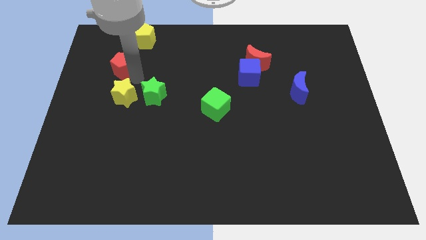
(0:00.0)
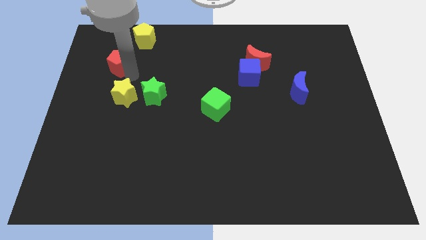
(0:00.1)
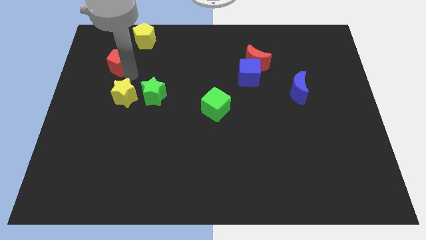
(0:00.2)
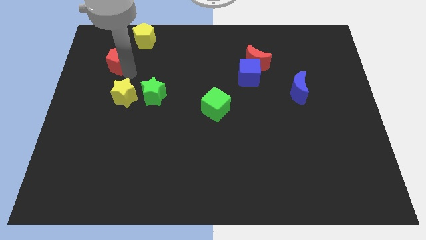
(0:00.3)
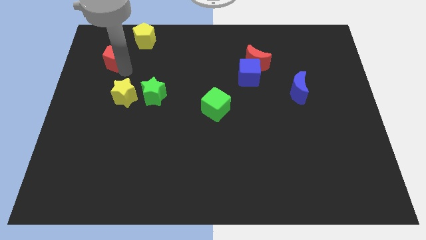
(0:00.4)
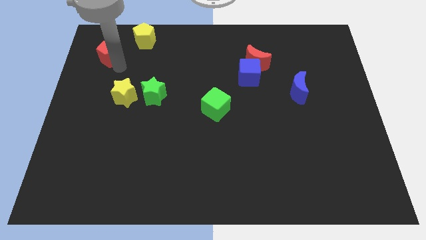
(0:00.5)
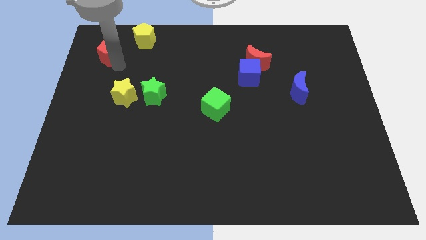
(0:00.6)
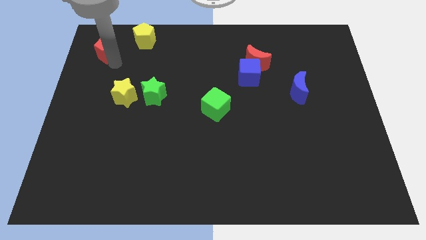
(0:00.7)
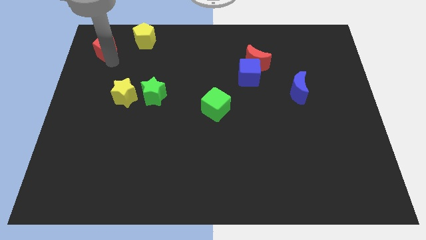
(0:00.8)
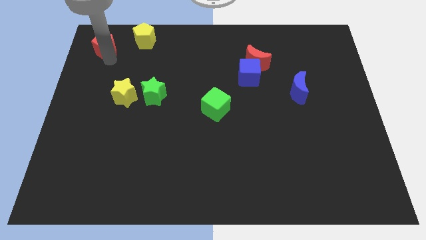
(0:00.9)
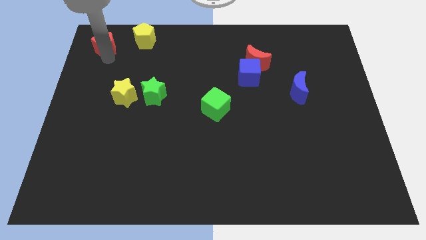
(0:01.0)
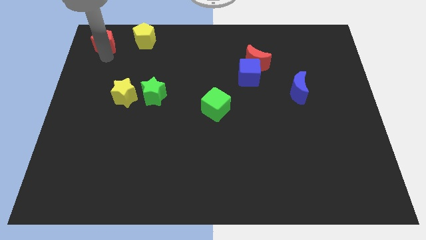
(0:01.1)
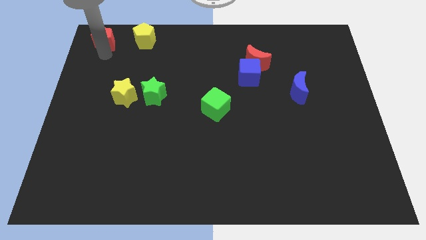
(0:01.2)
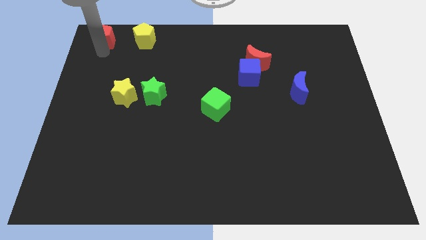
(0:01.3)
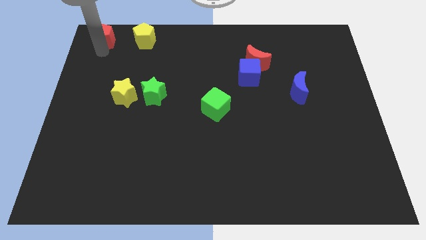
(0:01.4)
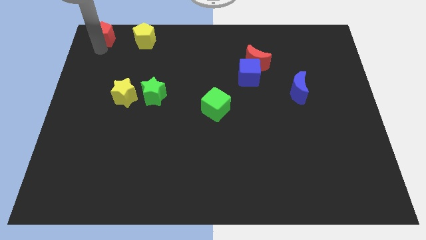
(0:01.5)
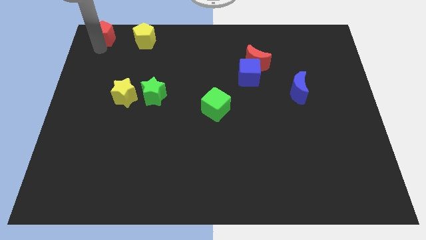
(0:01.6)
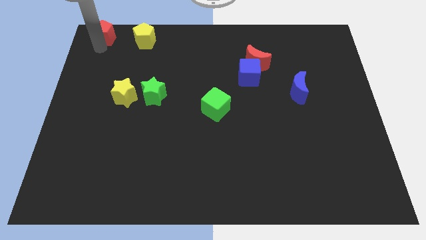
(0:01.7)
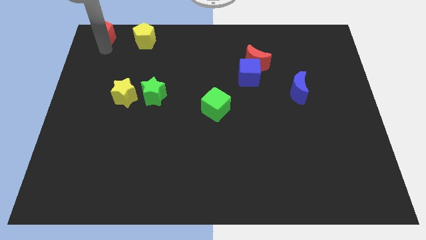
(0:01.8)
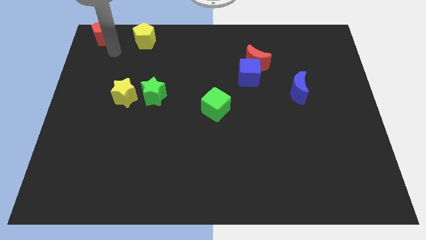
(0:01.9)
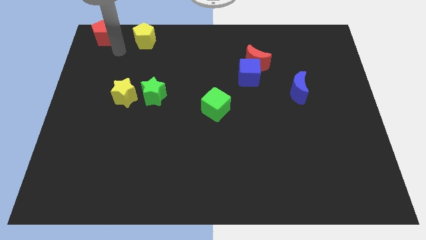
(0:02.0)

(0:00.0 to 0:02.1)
move red pentagon to the top left corner of the board

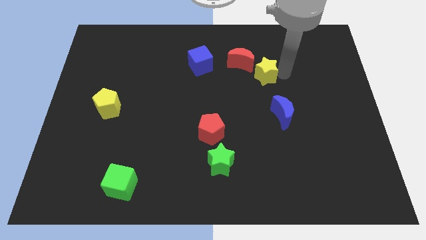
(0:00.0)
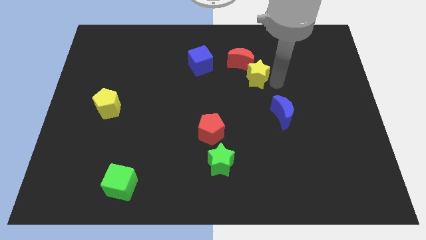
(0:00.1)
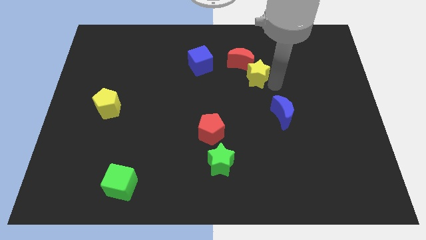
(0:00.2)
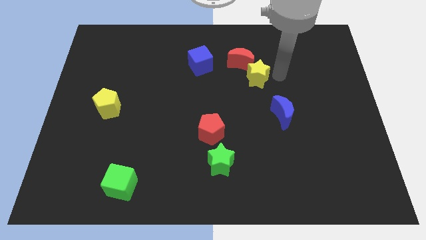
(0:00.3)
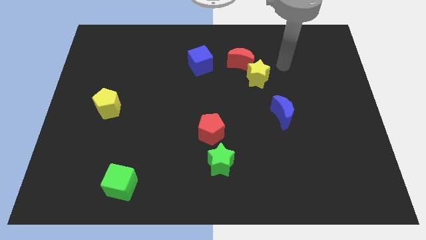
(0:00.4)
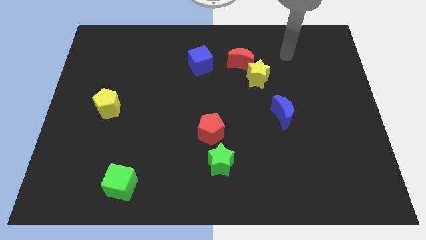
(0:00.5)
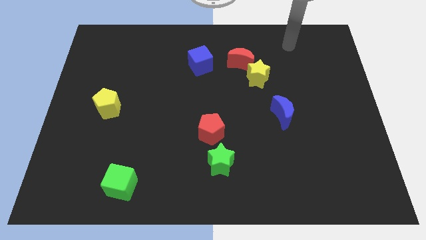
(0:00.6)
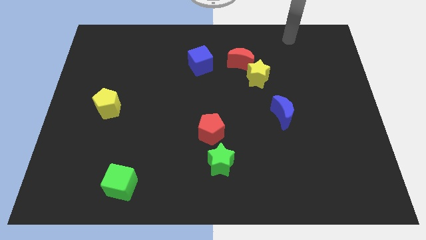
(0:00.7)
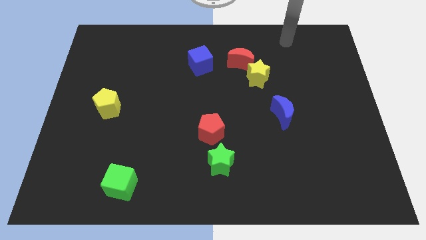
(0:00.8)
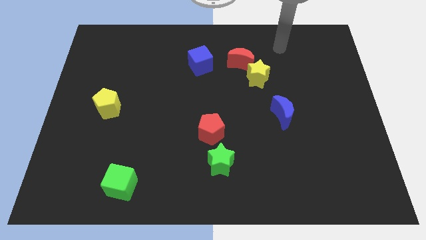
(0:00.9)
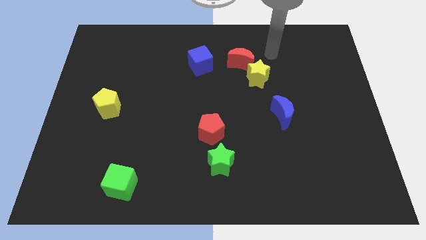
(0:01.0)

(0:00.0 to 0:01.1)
place yellow star below the red crescent

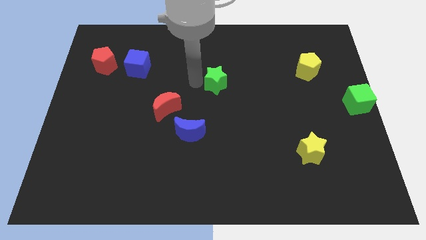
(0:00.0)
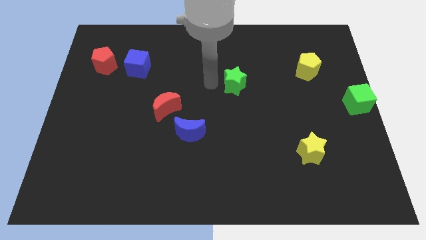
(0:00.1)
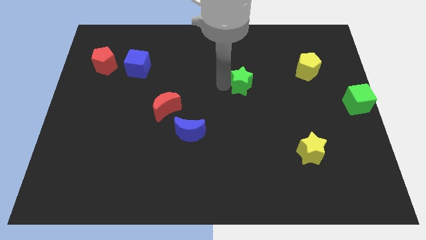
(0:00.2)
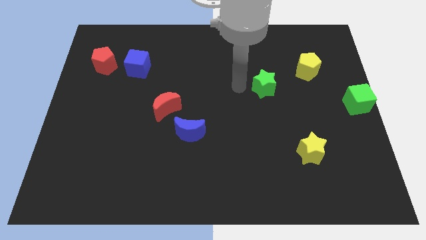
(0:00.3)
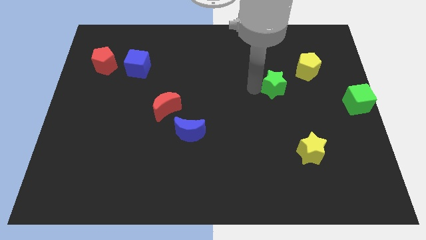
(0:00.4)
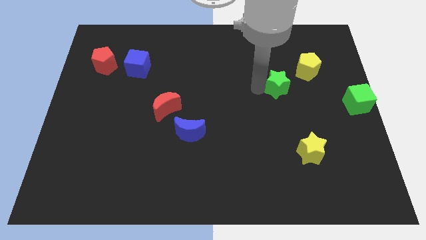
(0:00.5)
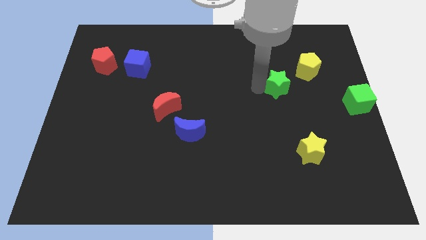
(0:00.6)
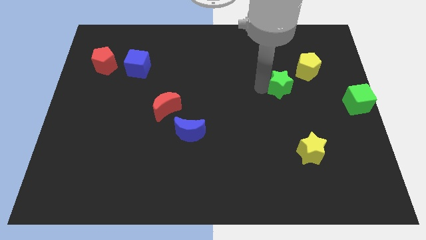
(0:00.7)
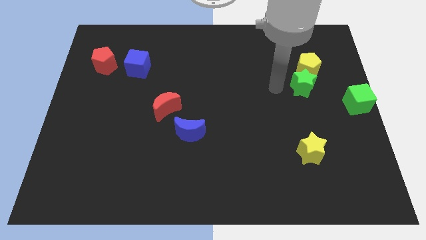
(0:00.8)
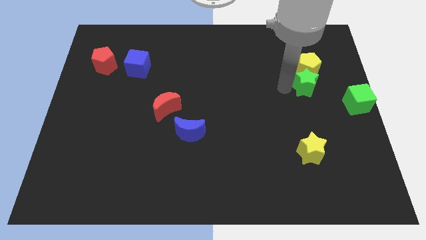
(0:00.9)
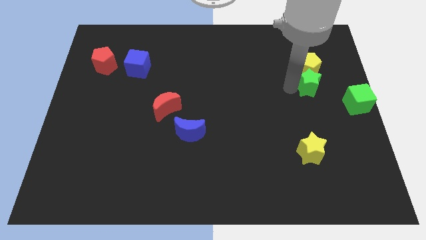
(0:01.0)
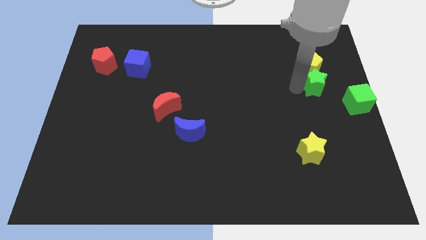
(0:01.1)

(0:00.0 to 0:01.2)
place the green star below the yellow pentagon

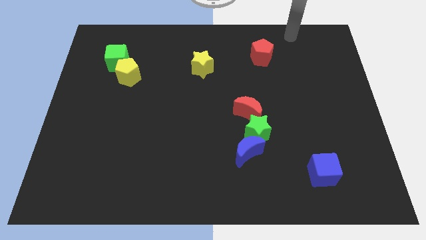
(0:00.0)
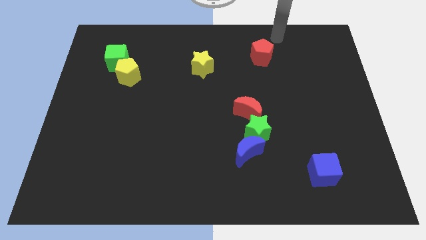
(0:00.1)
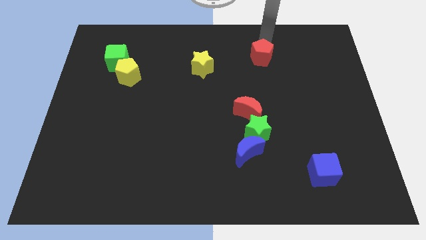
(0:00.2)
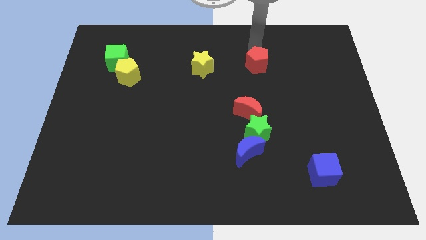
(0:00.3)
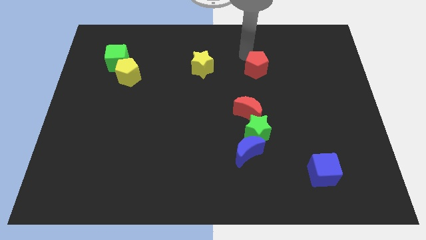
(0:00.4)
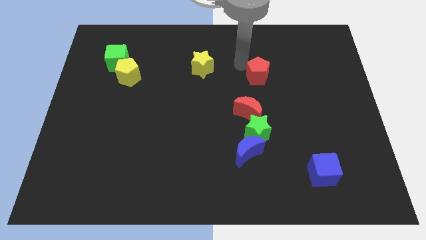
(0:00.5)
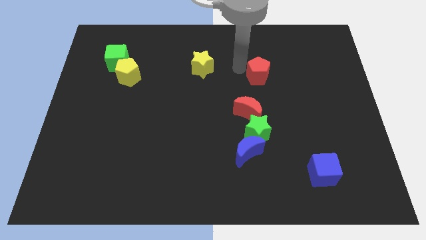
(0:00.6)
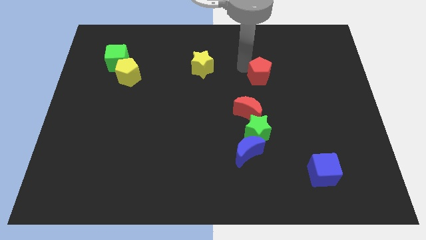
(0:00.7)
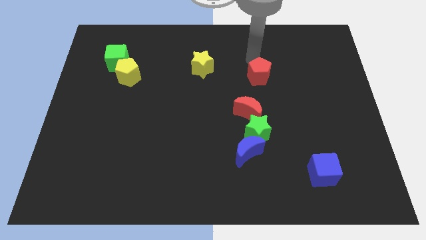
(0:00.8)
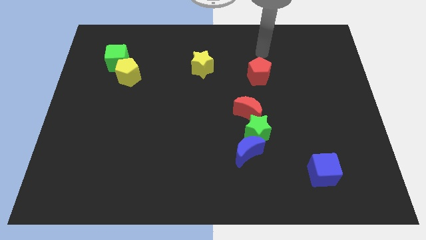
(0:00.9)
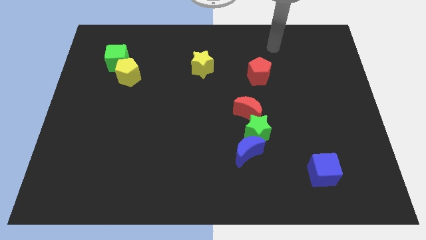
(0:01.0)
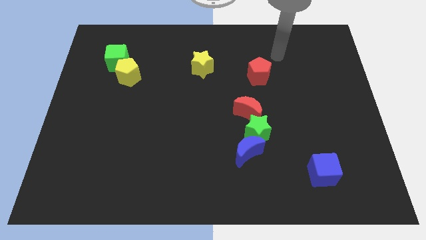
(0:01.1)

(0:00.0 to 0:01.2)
move the red pentagon to the bottom of the board

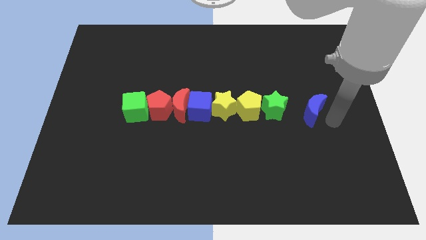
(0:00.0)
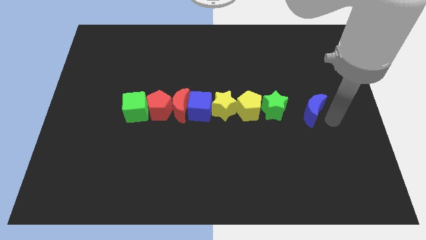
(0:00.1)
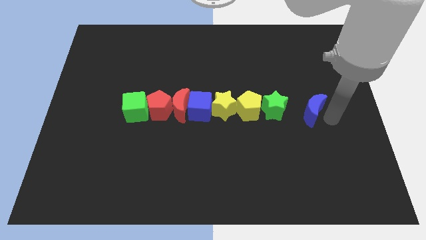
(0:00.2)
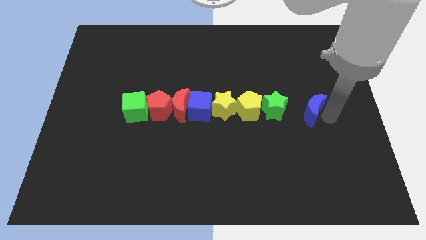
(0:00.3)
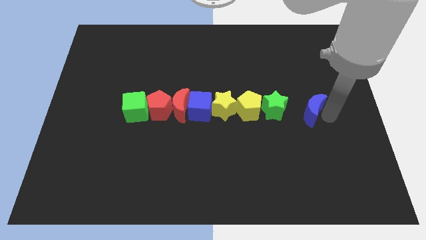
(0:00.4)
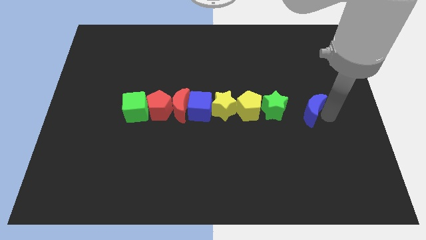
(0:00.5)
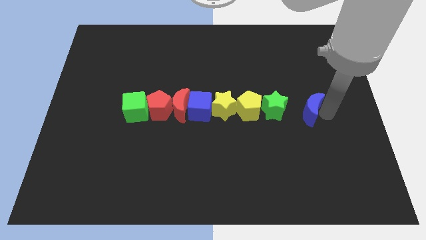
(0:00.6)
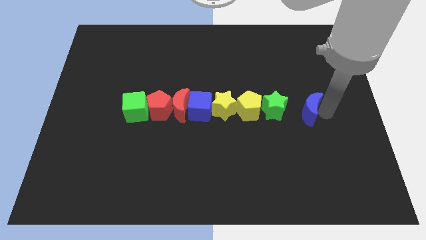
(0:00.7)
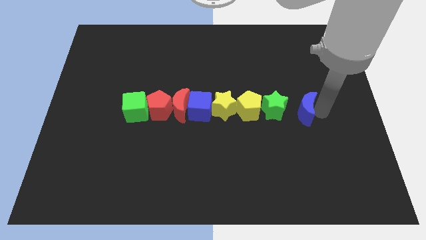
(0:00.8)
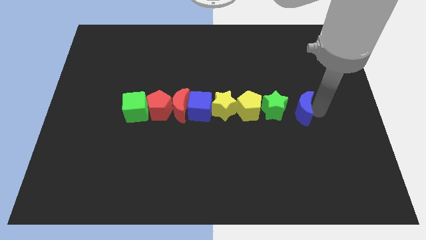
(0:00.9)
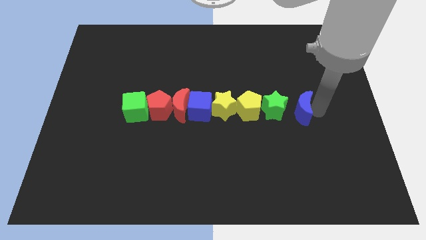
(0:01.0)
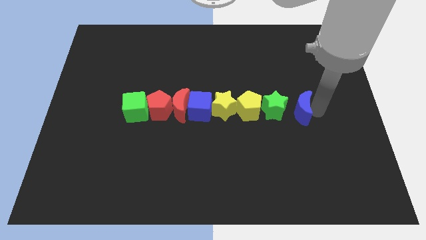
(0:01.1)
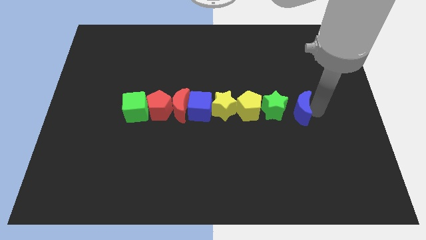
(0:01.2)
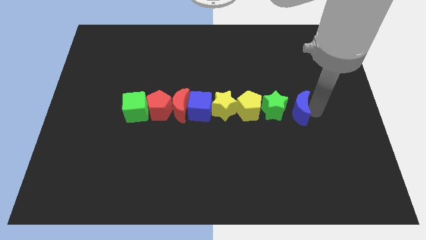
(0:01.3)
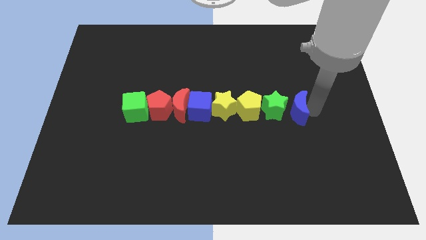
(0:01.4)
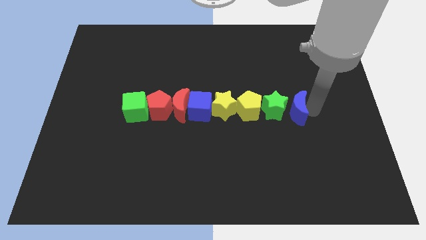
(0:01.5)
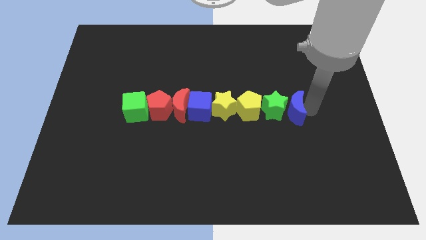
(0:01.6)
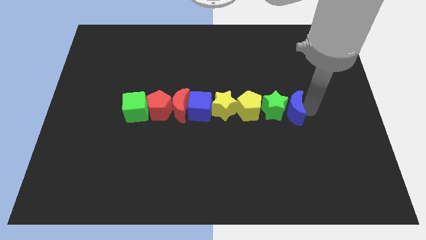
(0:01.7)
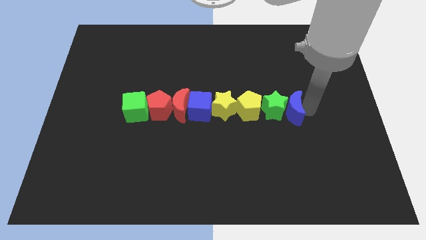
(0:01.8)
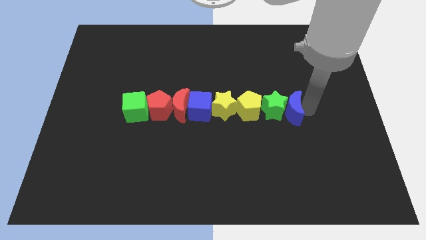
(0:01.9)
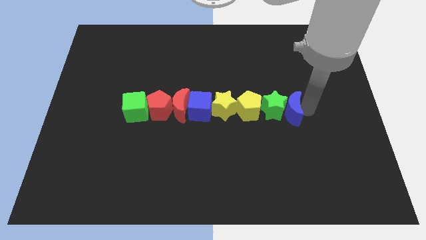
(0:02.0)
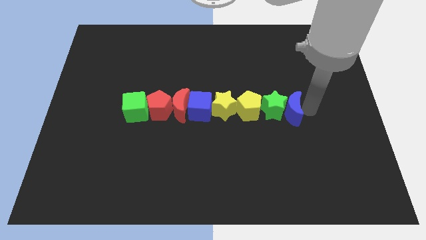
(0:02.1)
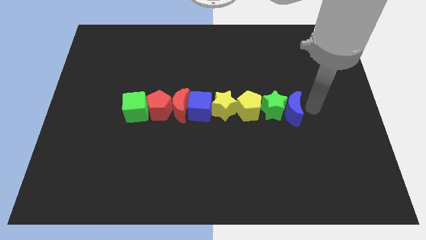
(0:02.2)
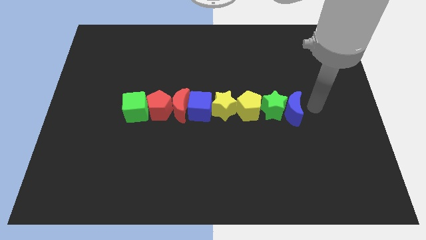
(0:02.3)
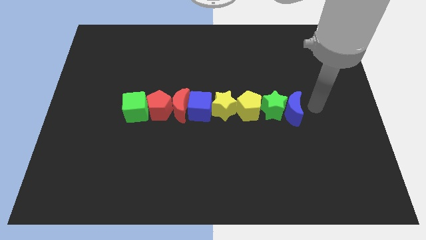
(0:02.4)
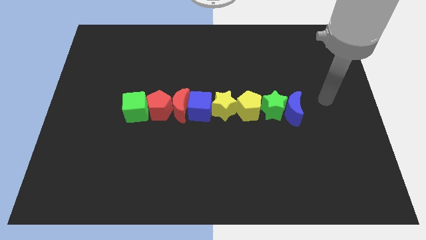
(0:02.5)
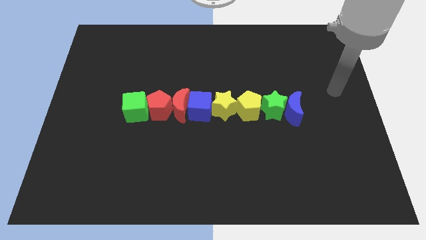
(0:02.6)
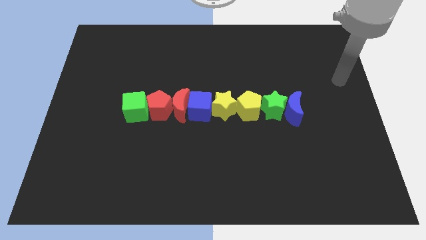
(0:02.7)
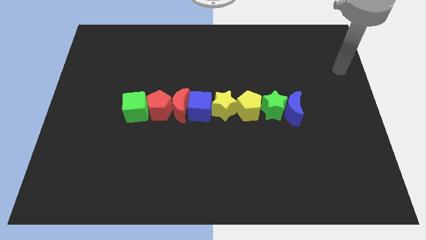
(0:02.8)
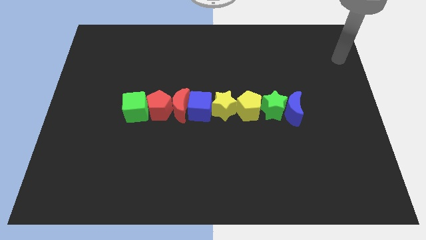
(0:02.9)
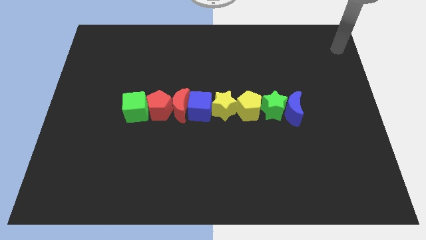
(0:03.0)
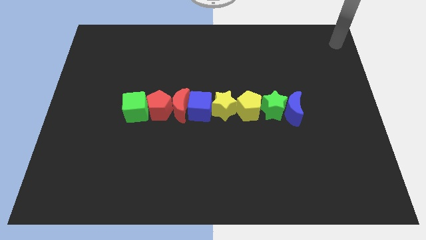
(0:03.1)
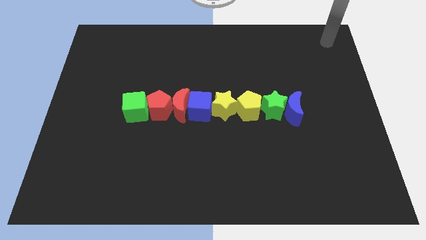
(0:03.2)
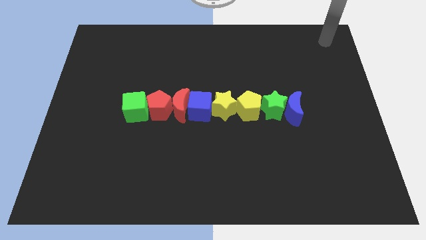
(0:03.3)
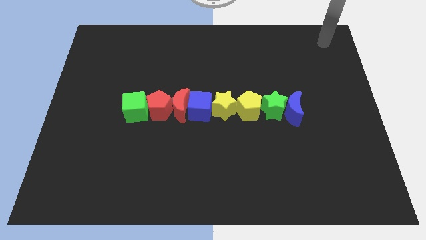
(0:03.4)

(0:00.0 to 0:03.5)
slide the blue crescent into the right side of the green star
